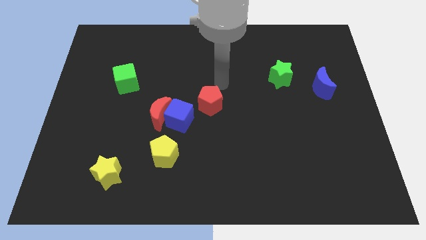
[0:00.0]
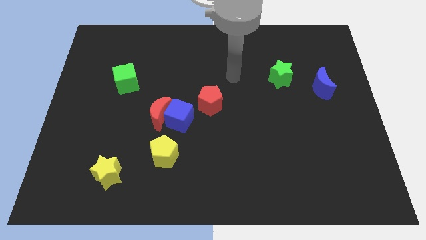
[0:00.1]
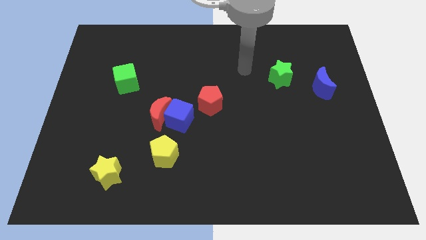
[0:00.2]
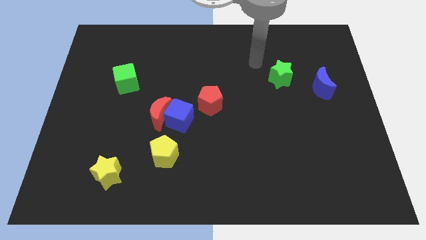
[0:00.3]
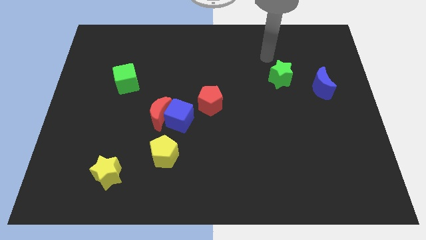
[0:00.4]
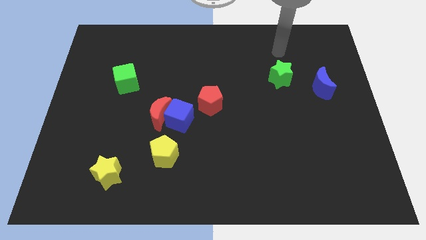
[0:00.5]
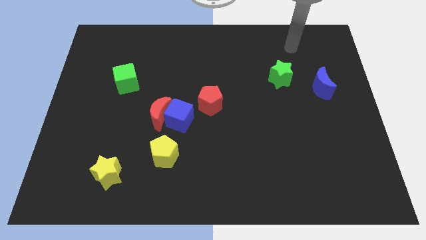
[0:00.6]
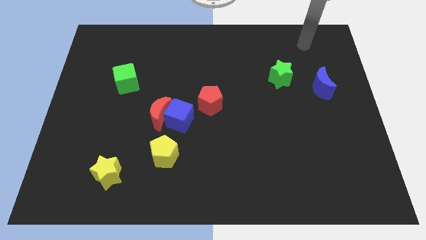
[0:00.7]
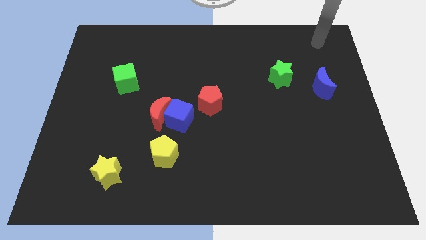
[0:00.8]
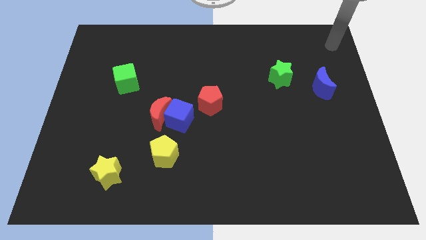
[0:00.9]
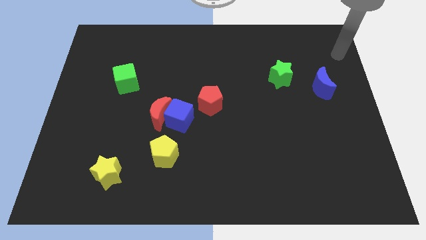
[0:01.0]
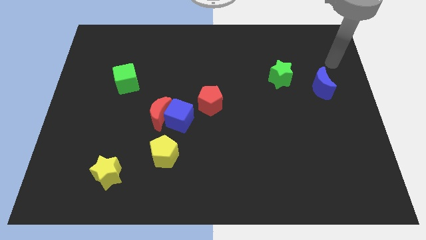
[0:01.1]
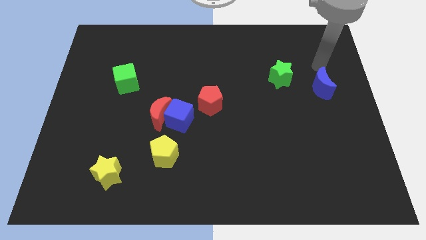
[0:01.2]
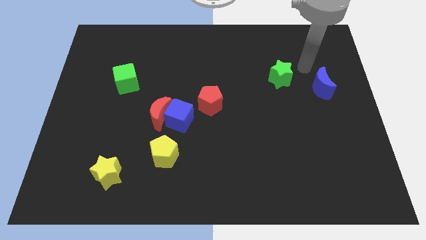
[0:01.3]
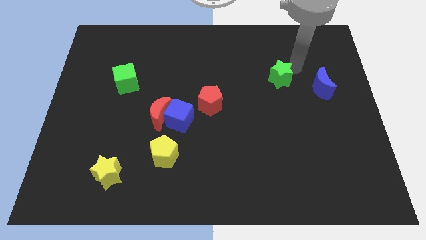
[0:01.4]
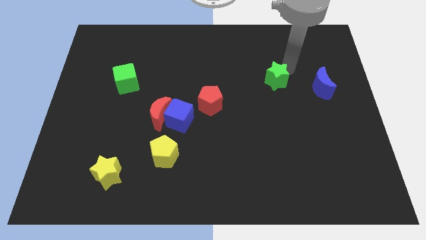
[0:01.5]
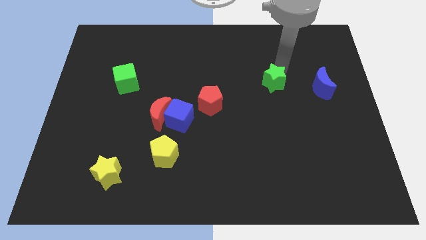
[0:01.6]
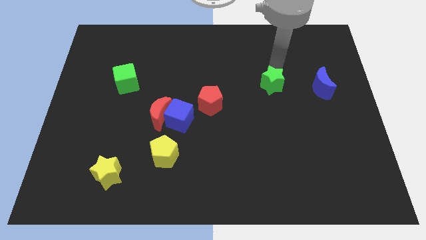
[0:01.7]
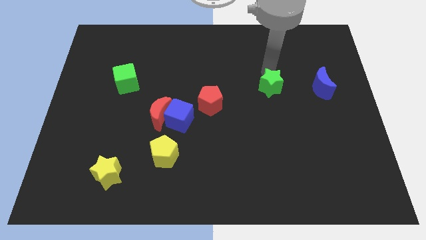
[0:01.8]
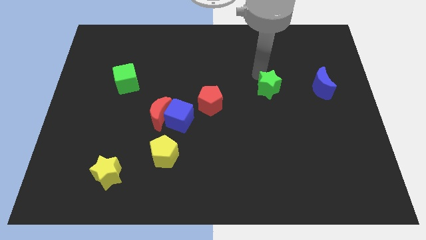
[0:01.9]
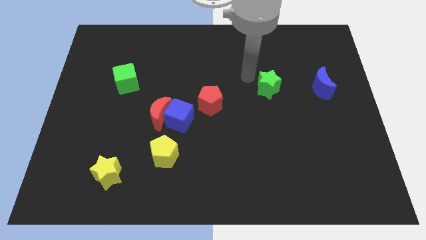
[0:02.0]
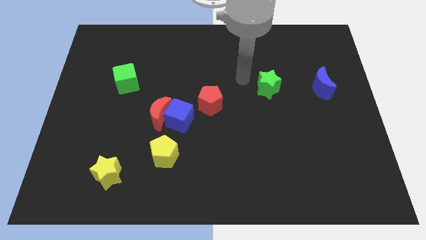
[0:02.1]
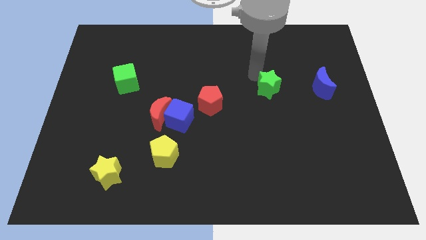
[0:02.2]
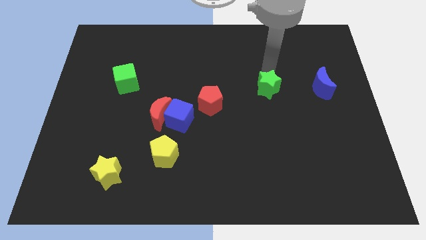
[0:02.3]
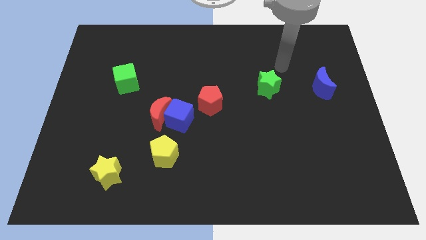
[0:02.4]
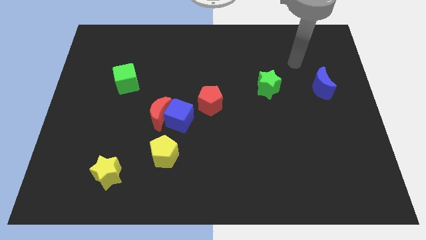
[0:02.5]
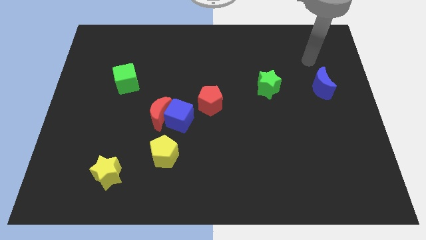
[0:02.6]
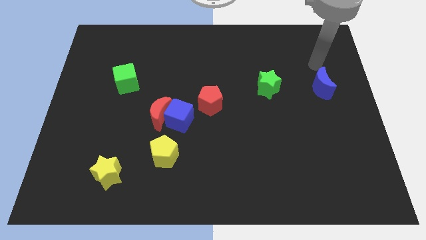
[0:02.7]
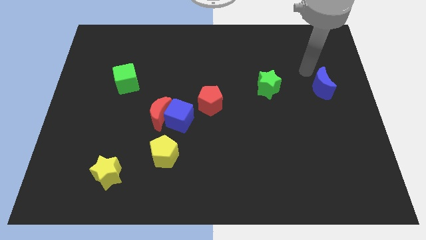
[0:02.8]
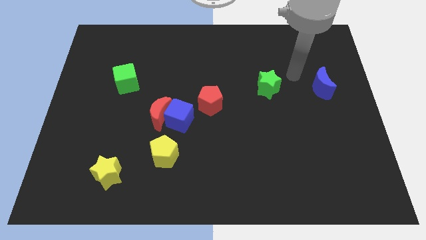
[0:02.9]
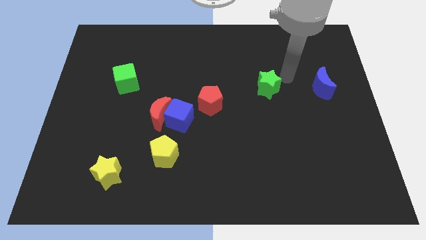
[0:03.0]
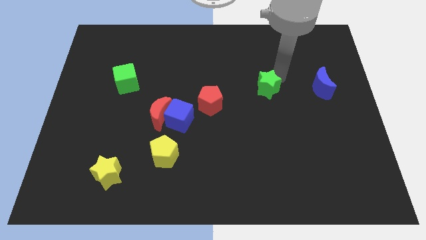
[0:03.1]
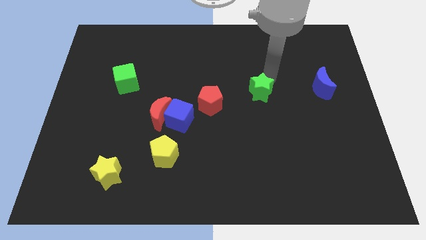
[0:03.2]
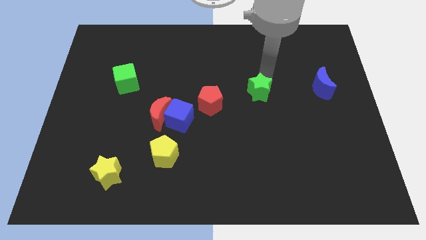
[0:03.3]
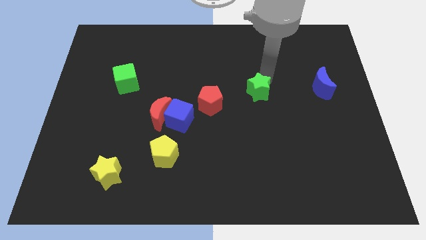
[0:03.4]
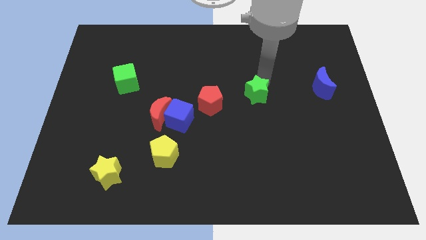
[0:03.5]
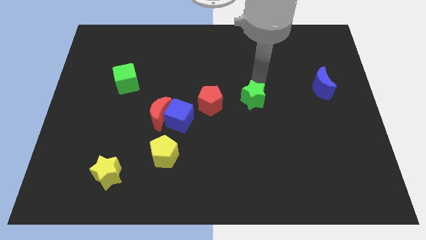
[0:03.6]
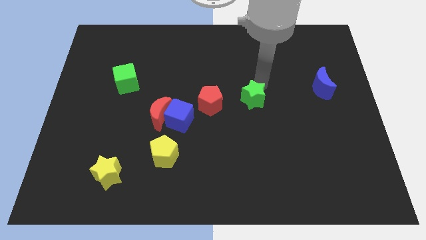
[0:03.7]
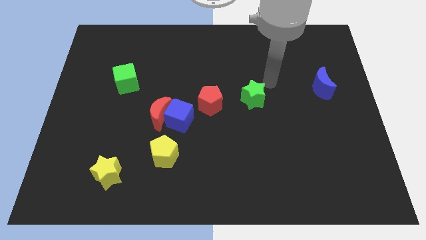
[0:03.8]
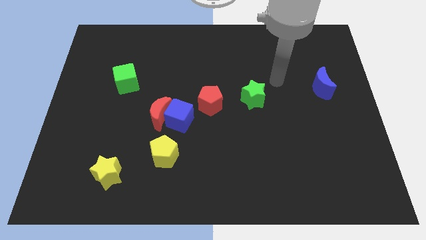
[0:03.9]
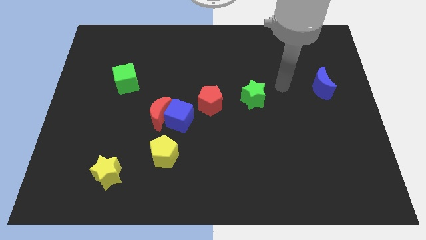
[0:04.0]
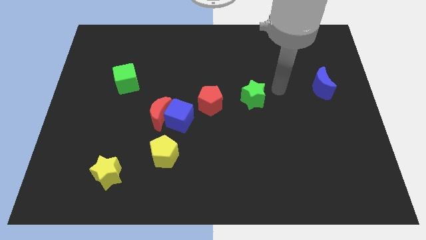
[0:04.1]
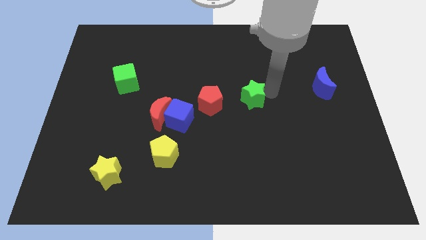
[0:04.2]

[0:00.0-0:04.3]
move the green star to the right of the red pentagon

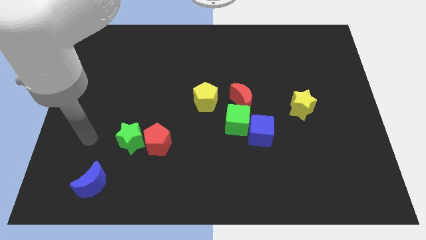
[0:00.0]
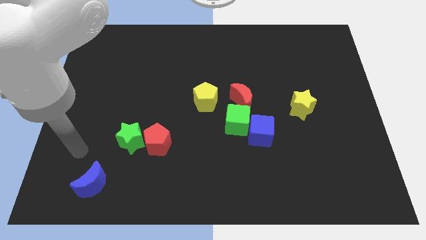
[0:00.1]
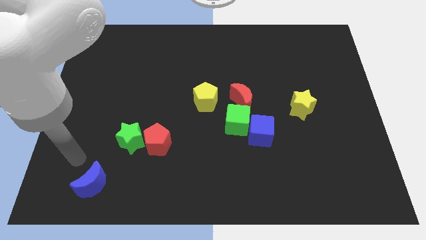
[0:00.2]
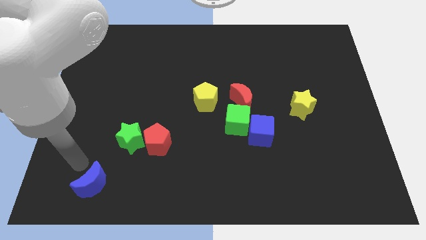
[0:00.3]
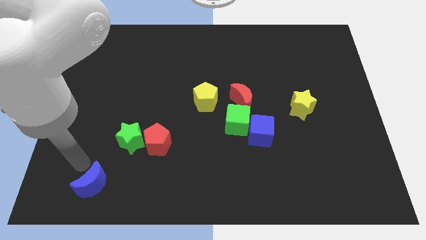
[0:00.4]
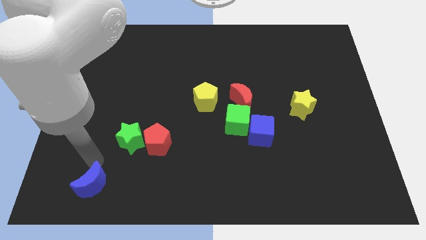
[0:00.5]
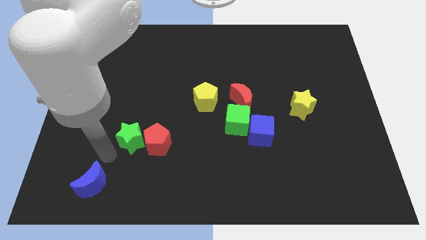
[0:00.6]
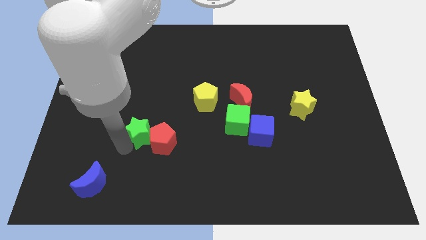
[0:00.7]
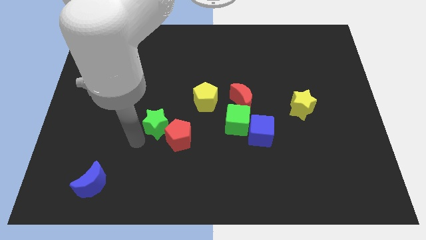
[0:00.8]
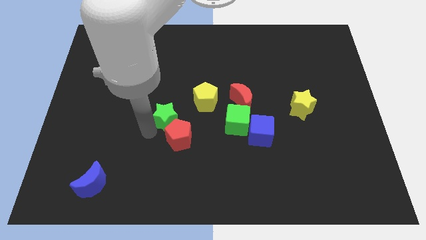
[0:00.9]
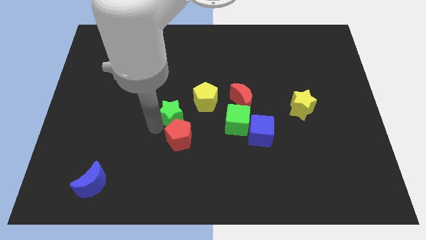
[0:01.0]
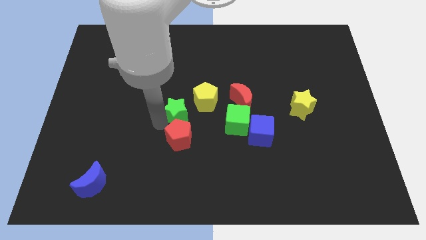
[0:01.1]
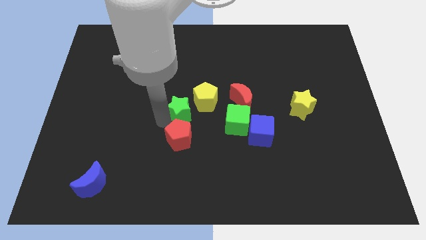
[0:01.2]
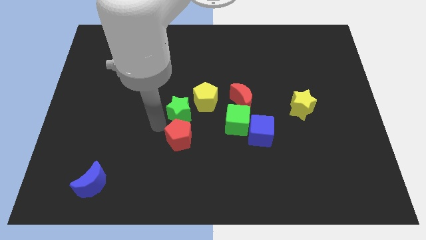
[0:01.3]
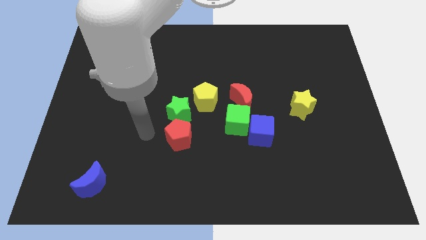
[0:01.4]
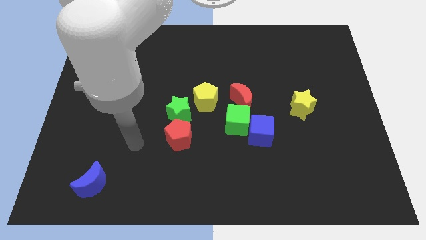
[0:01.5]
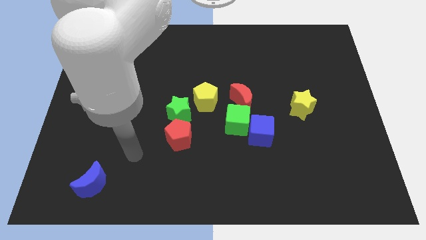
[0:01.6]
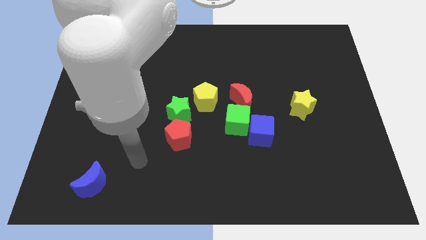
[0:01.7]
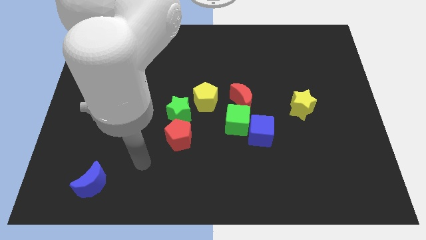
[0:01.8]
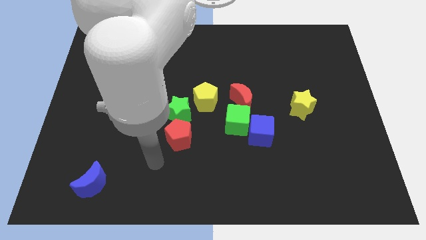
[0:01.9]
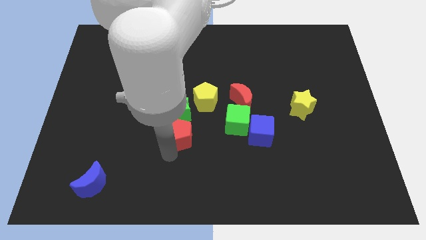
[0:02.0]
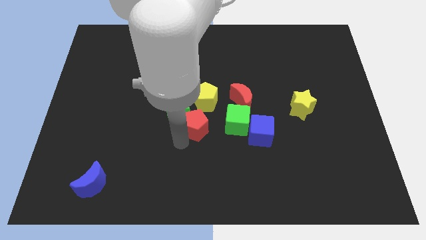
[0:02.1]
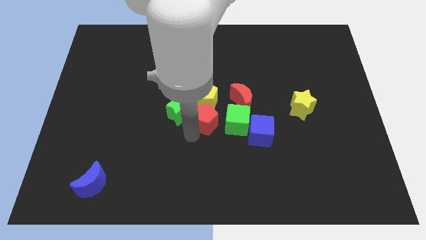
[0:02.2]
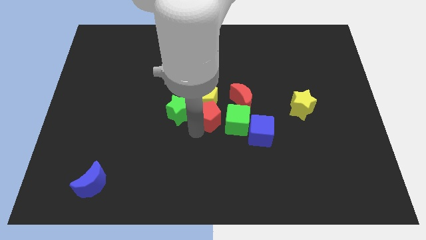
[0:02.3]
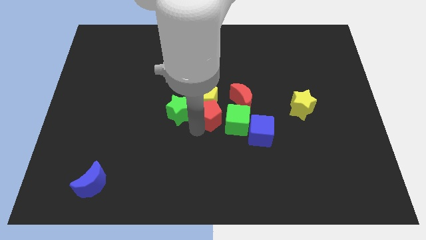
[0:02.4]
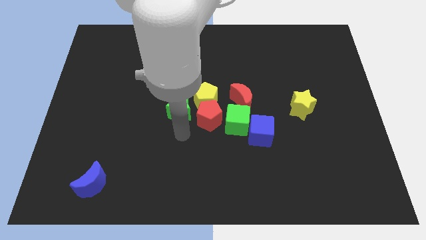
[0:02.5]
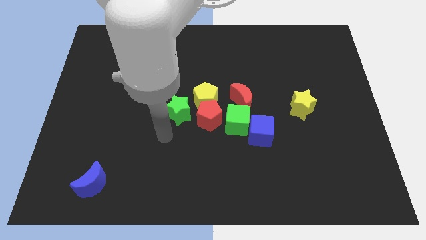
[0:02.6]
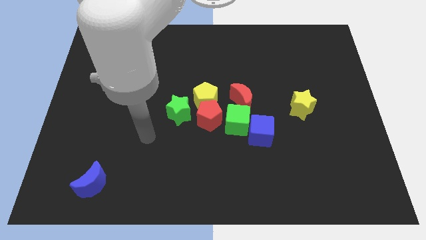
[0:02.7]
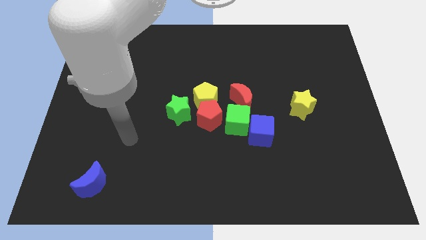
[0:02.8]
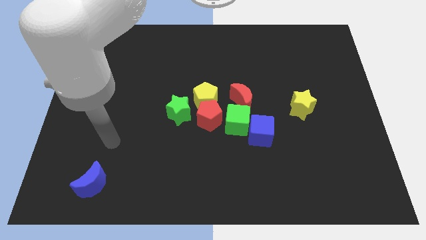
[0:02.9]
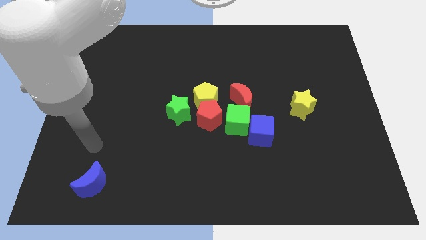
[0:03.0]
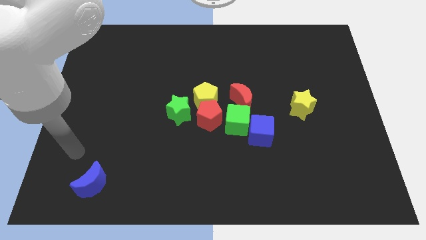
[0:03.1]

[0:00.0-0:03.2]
push the red pentagon to the center of the board

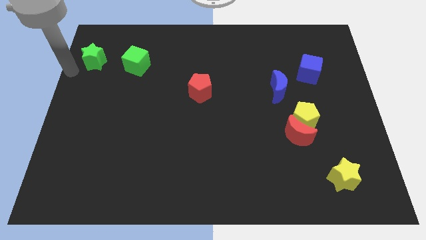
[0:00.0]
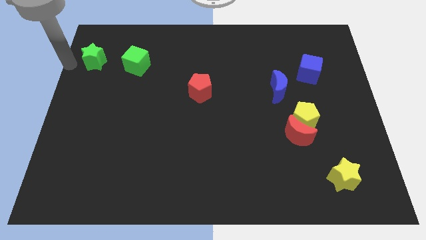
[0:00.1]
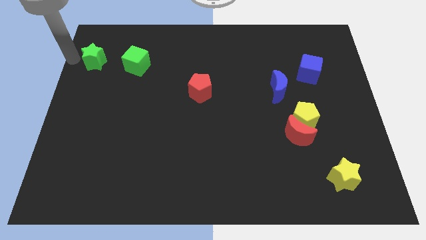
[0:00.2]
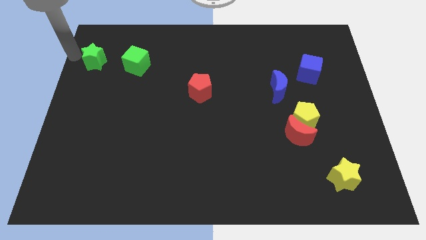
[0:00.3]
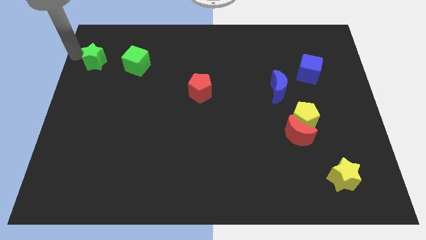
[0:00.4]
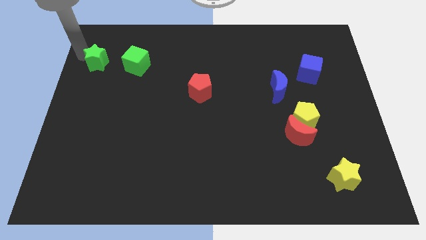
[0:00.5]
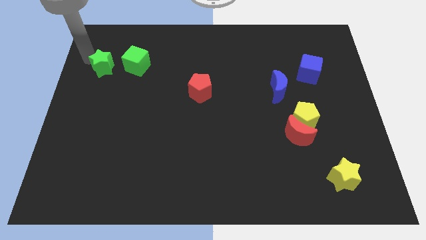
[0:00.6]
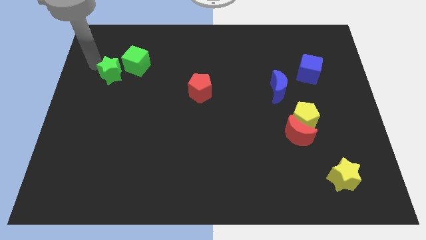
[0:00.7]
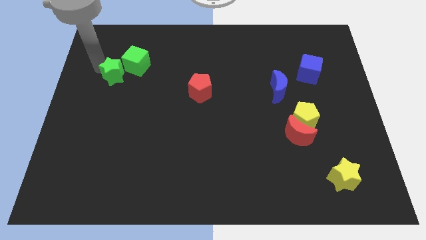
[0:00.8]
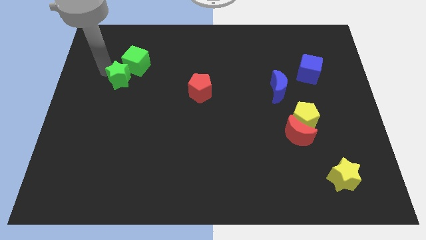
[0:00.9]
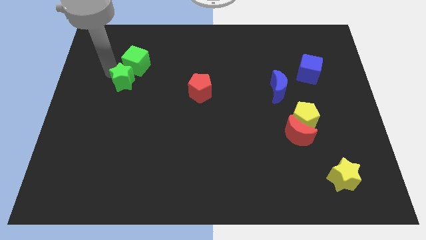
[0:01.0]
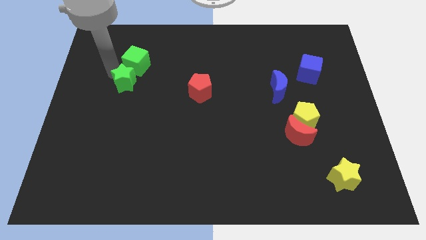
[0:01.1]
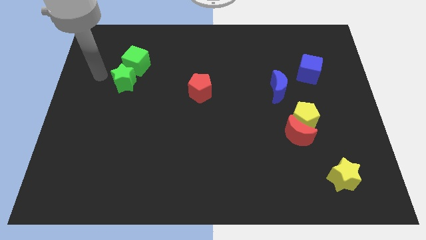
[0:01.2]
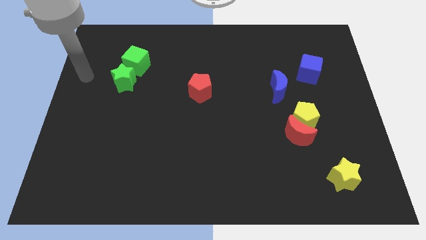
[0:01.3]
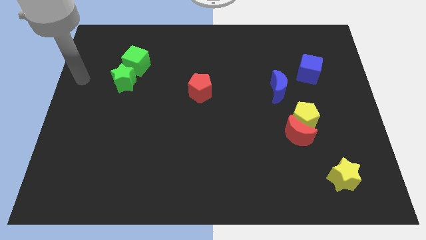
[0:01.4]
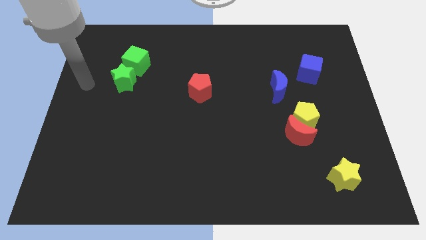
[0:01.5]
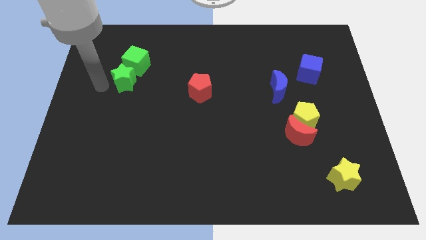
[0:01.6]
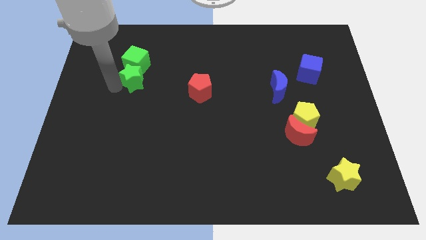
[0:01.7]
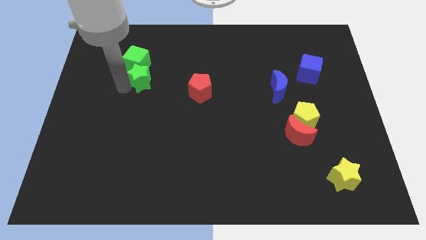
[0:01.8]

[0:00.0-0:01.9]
push the green star into the green cube
